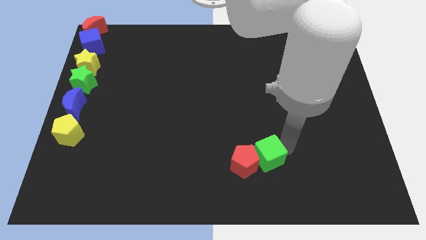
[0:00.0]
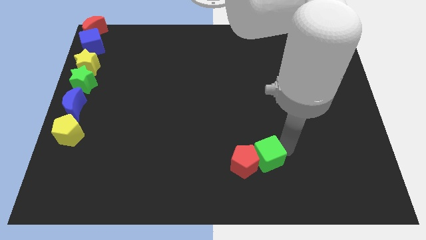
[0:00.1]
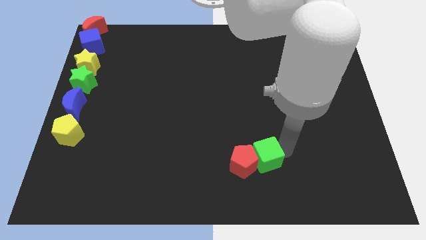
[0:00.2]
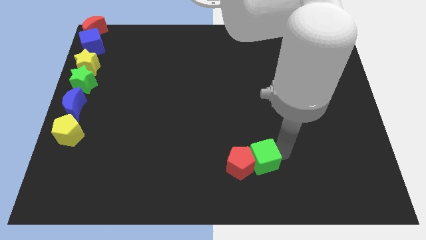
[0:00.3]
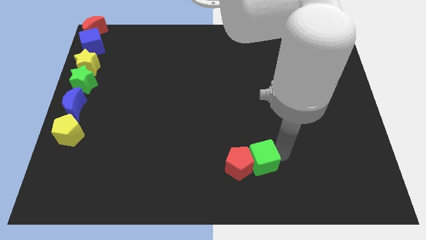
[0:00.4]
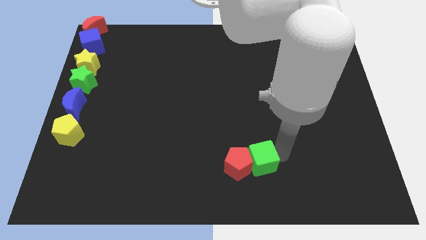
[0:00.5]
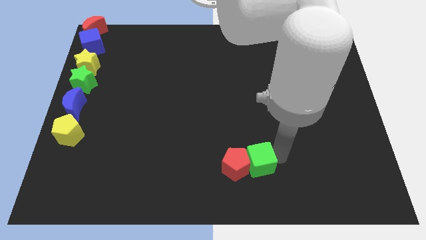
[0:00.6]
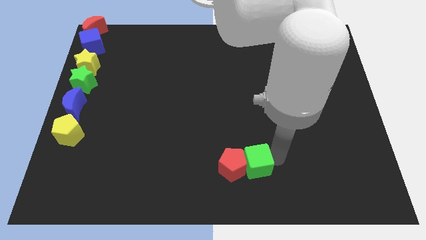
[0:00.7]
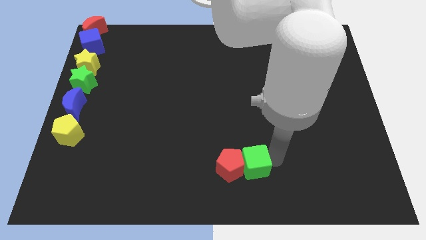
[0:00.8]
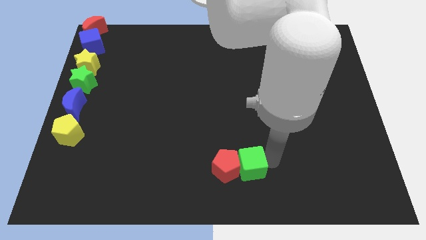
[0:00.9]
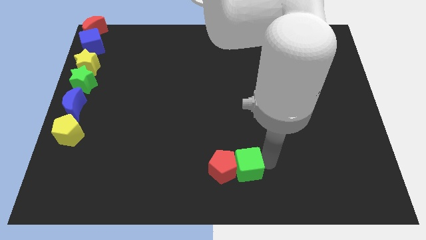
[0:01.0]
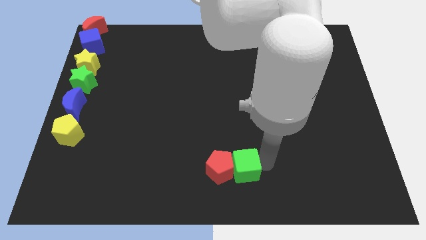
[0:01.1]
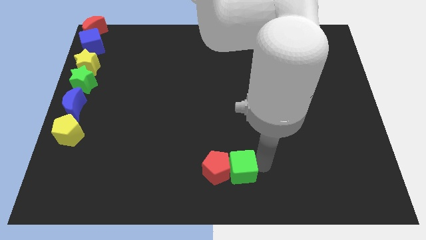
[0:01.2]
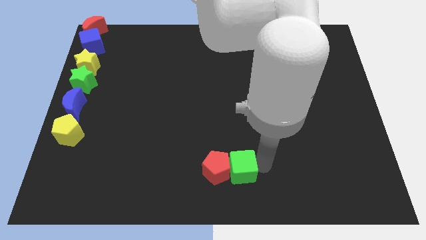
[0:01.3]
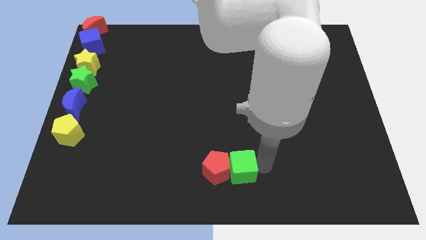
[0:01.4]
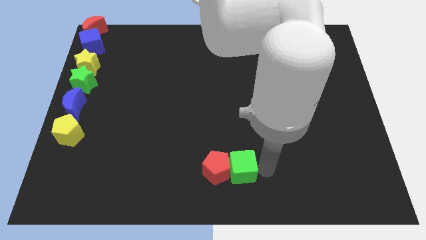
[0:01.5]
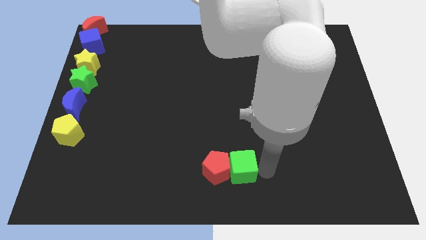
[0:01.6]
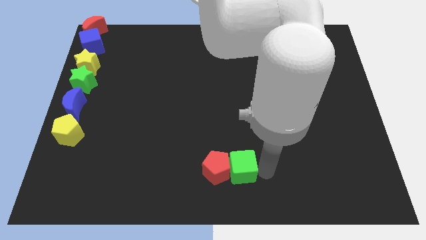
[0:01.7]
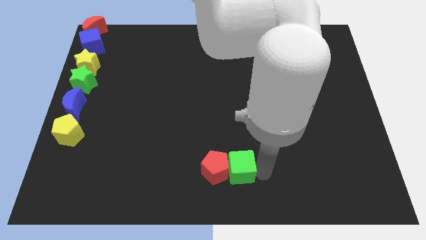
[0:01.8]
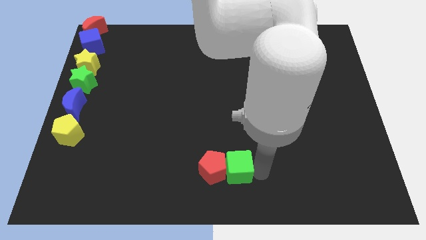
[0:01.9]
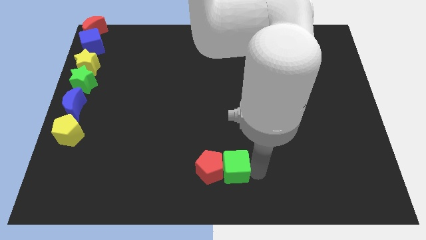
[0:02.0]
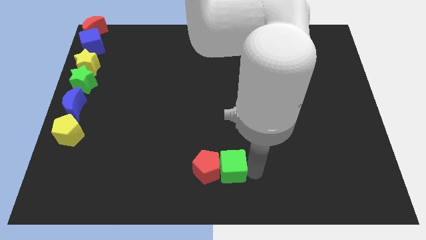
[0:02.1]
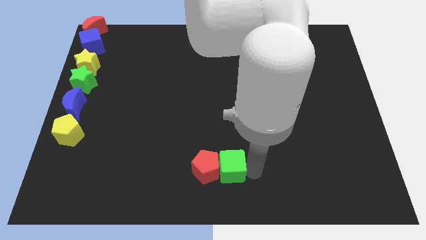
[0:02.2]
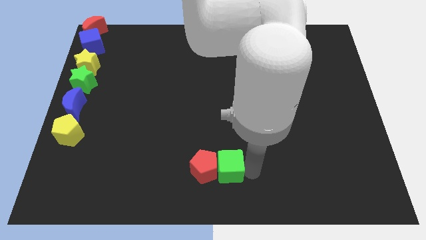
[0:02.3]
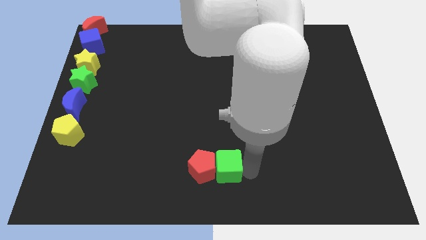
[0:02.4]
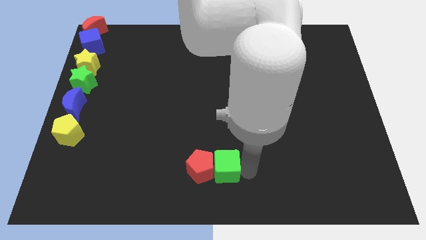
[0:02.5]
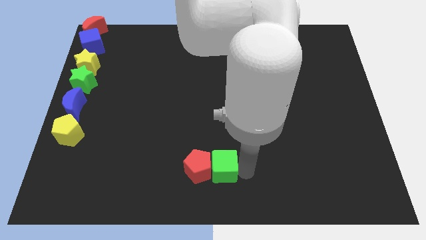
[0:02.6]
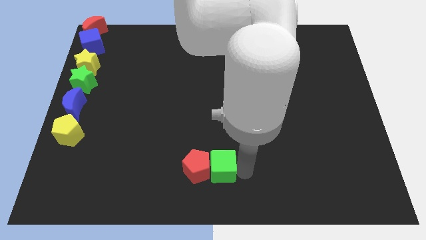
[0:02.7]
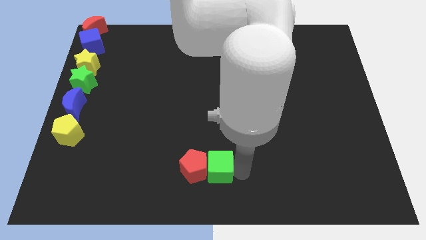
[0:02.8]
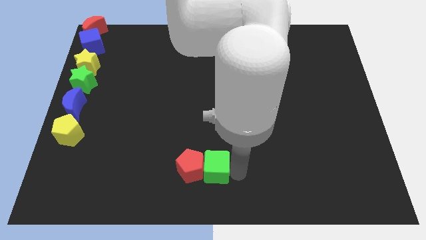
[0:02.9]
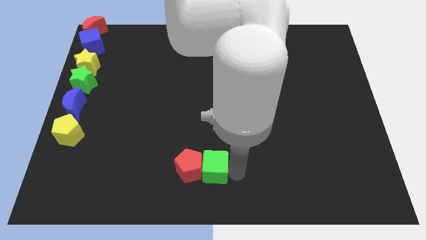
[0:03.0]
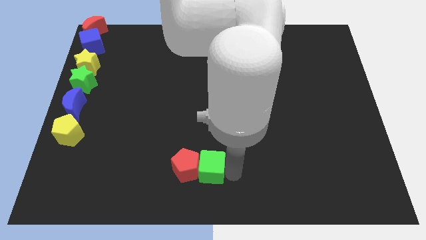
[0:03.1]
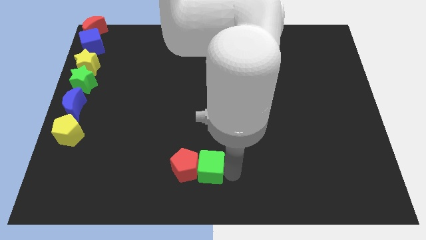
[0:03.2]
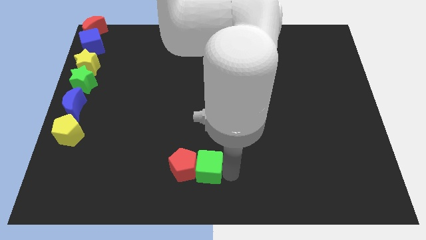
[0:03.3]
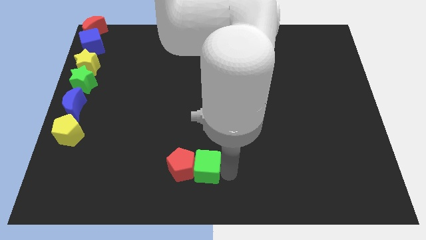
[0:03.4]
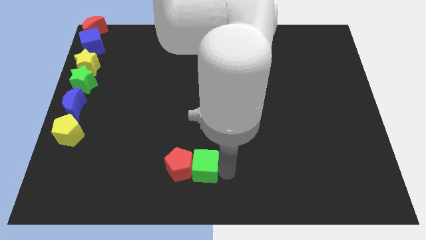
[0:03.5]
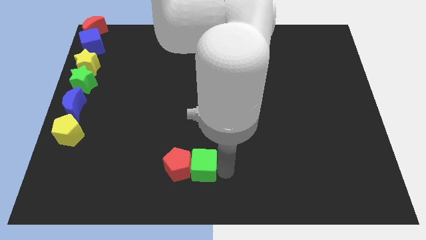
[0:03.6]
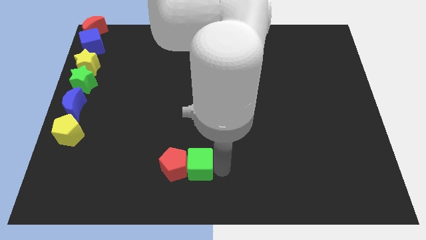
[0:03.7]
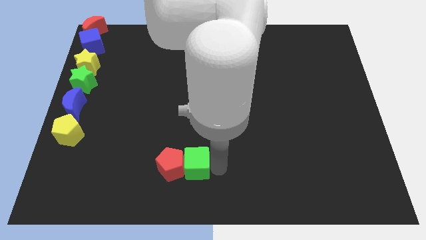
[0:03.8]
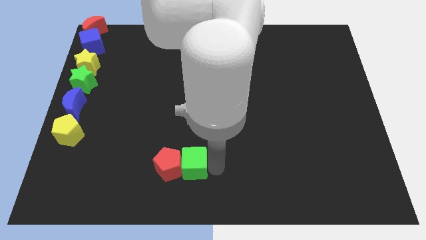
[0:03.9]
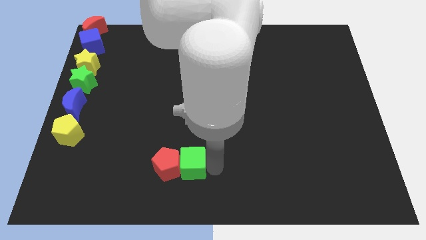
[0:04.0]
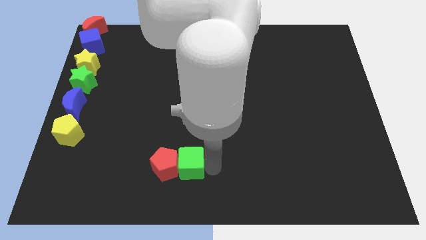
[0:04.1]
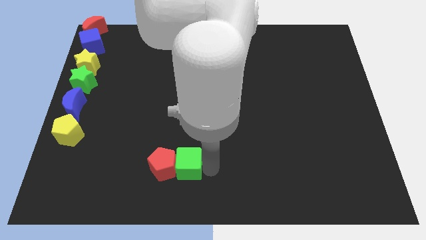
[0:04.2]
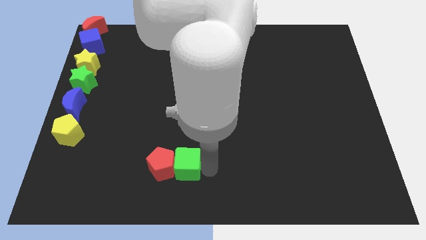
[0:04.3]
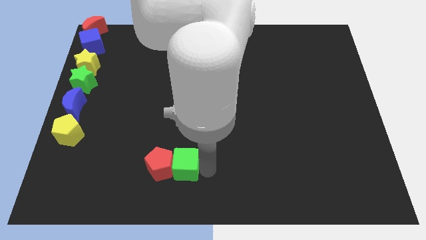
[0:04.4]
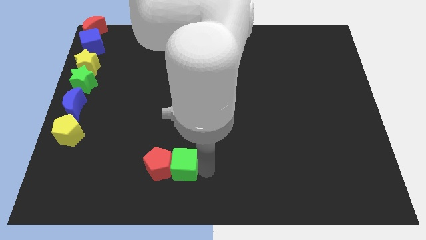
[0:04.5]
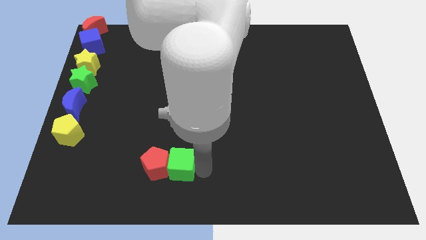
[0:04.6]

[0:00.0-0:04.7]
slightly drag the green cube and red pentagon towards left

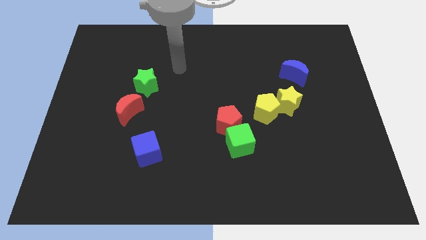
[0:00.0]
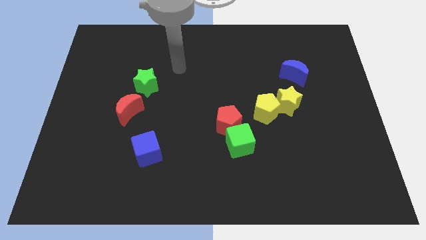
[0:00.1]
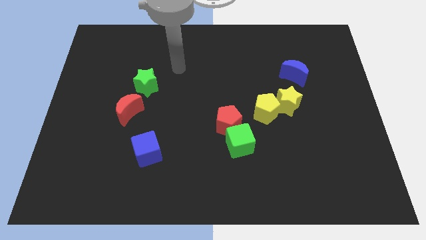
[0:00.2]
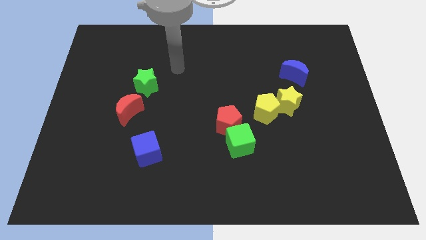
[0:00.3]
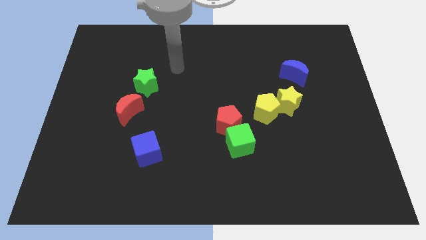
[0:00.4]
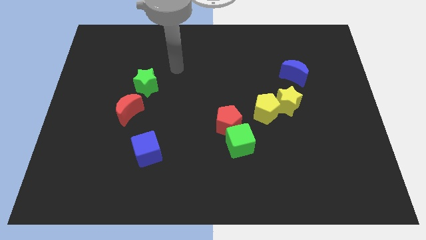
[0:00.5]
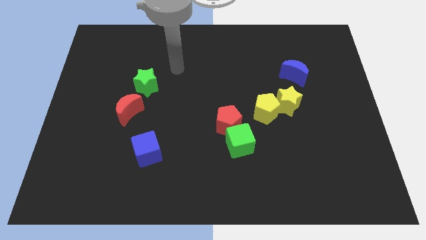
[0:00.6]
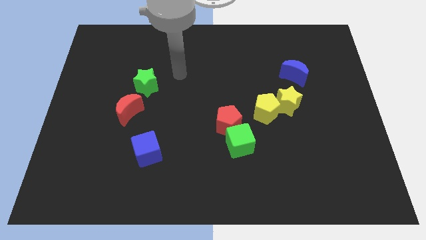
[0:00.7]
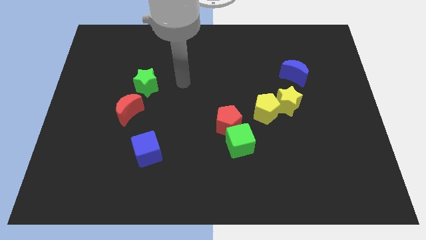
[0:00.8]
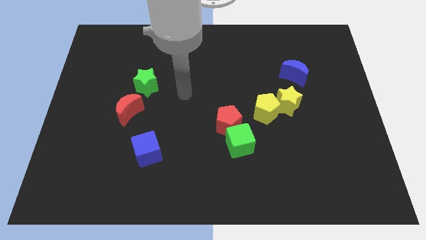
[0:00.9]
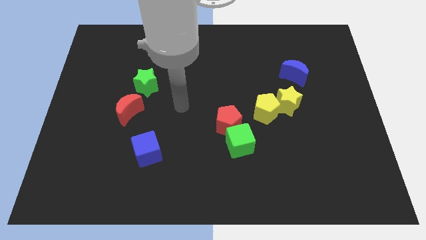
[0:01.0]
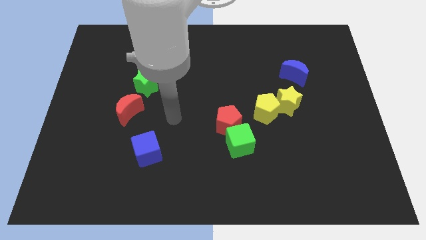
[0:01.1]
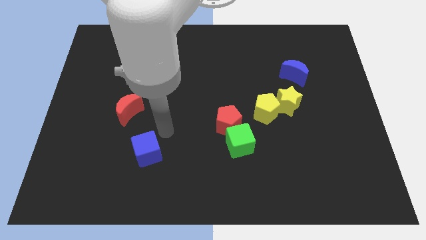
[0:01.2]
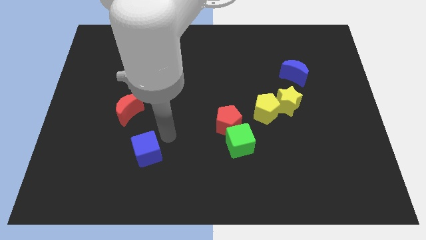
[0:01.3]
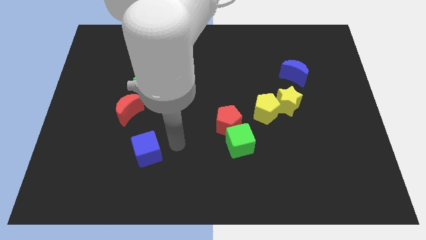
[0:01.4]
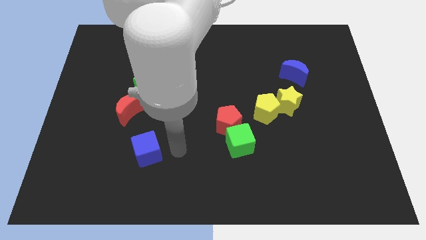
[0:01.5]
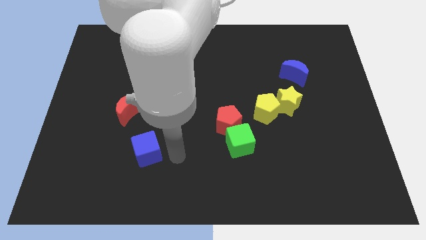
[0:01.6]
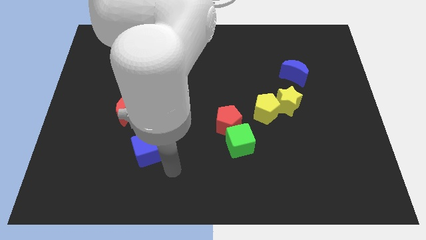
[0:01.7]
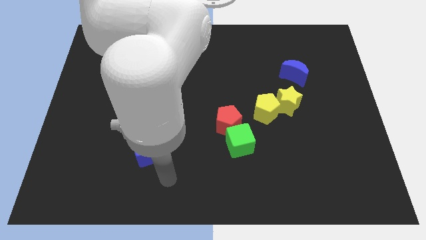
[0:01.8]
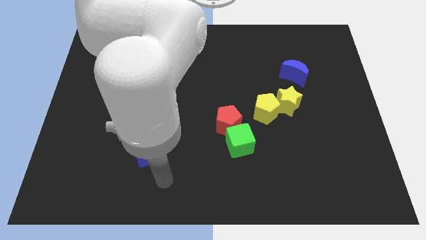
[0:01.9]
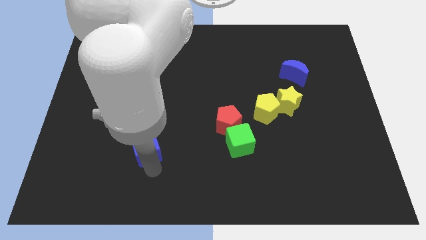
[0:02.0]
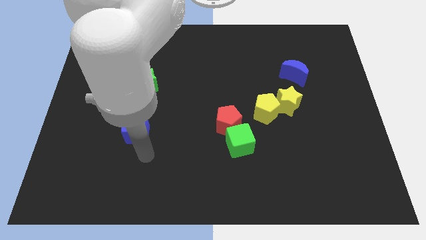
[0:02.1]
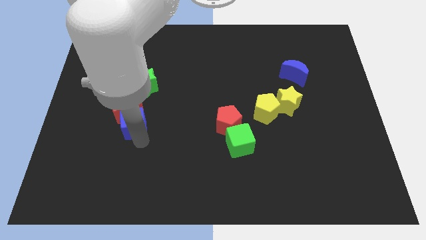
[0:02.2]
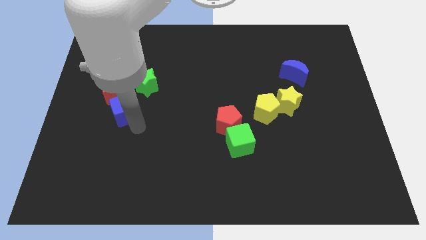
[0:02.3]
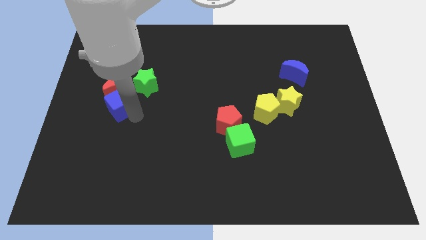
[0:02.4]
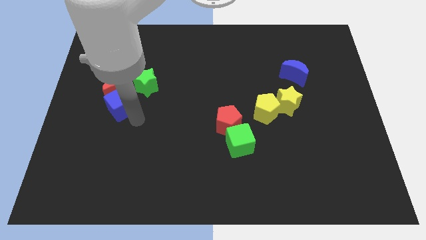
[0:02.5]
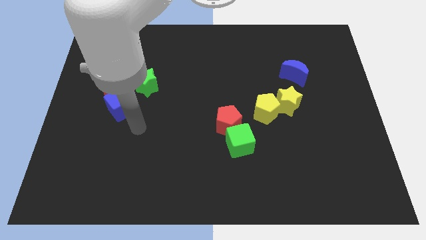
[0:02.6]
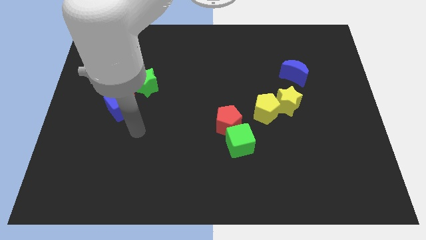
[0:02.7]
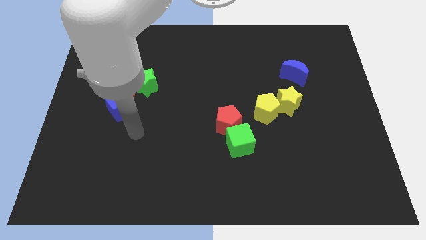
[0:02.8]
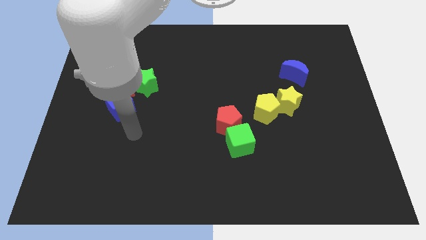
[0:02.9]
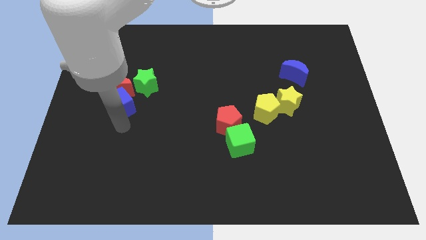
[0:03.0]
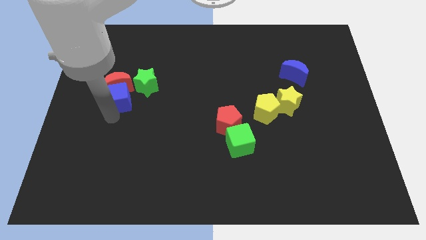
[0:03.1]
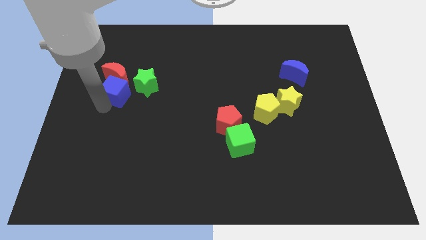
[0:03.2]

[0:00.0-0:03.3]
push blue cube into red crescent

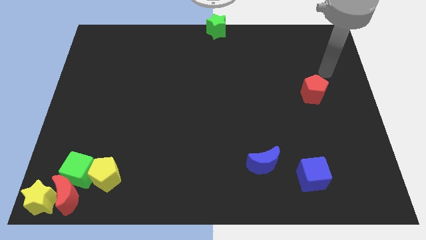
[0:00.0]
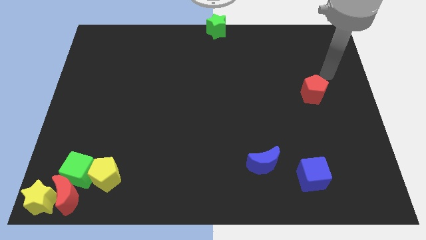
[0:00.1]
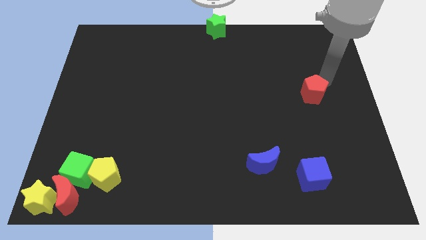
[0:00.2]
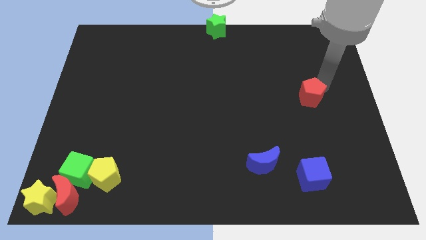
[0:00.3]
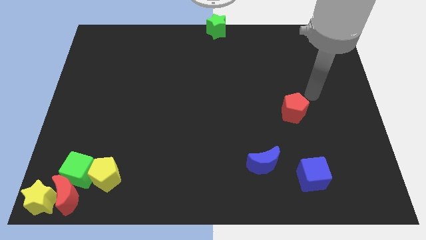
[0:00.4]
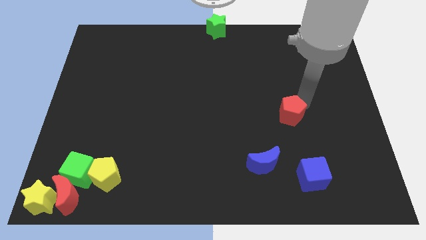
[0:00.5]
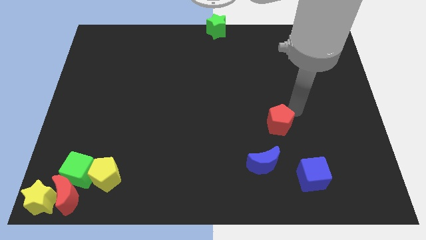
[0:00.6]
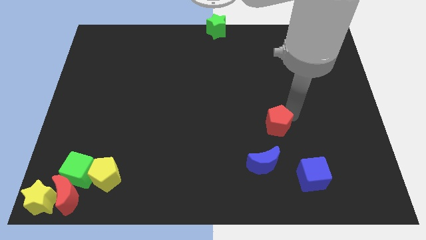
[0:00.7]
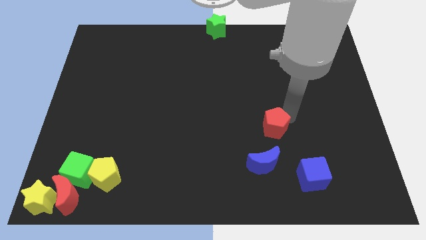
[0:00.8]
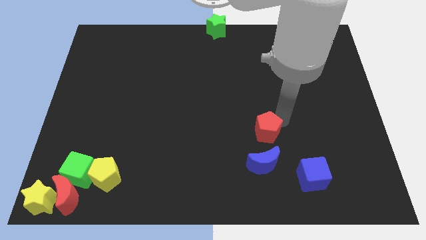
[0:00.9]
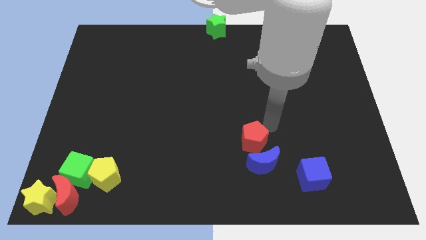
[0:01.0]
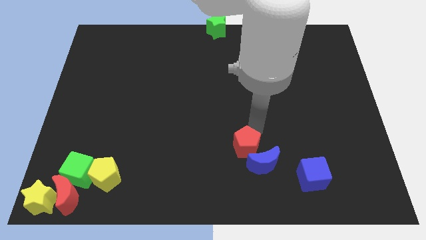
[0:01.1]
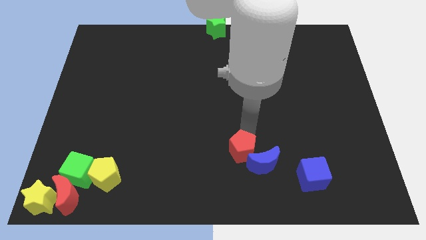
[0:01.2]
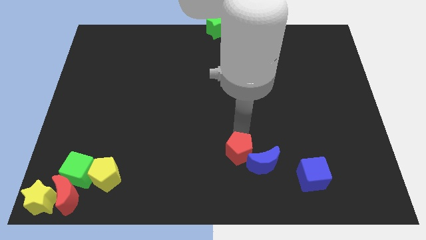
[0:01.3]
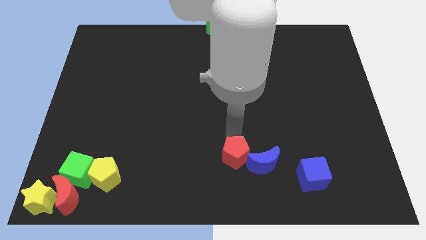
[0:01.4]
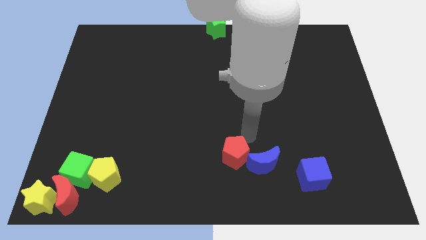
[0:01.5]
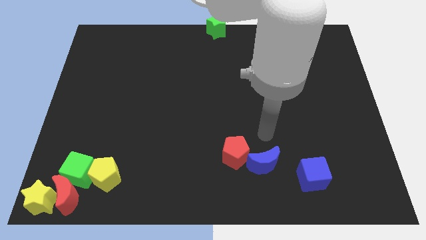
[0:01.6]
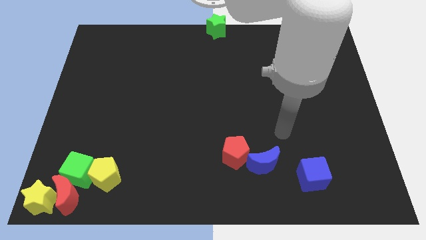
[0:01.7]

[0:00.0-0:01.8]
move the red pentagon close to the left side of the blue crescent
